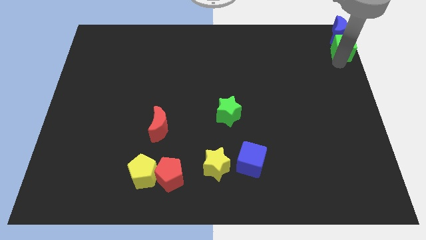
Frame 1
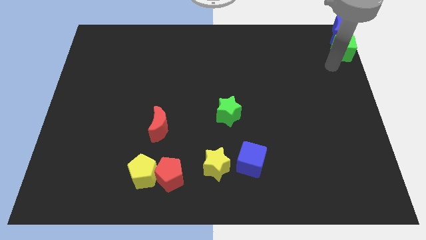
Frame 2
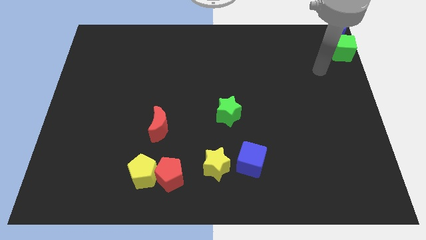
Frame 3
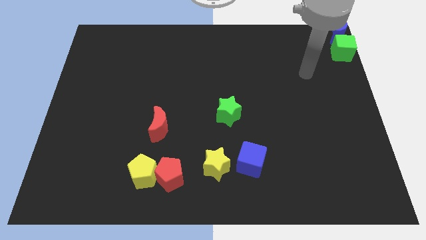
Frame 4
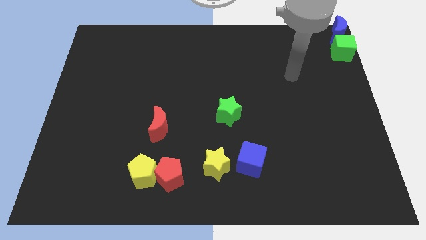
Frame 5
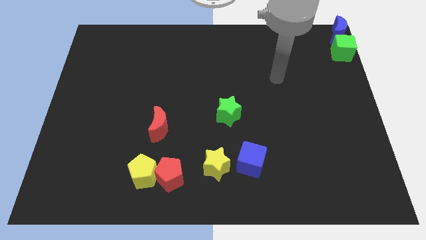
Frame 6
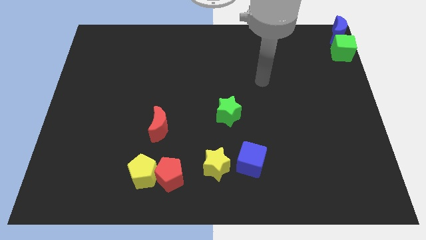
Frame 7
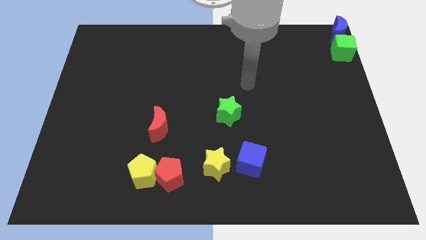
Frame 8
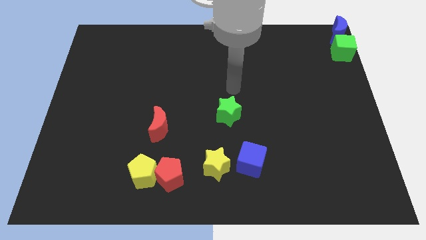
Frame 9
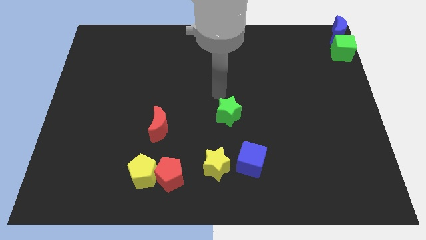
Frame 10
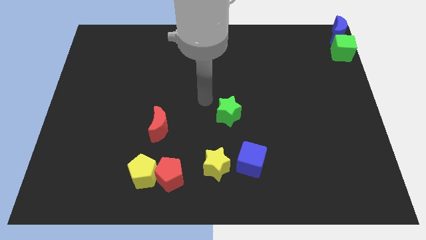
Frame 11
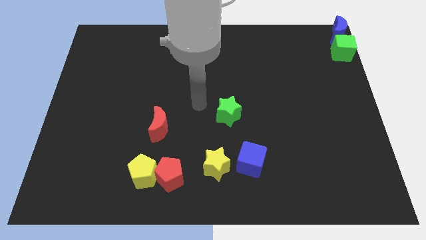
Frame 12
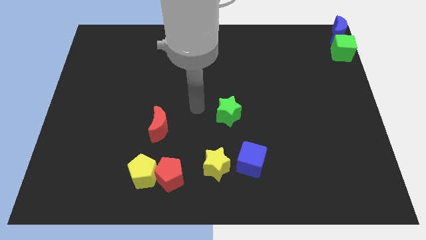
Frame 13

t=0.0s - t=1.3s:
move your arm away from the green cube

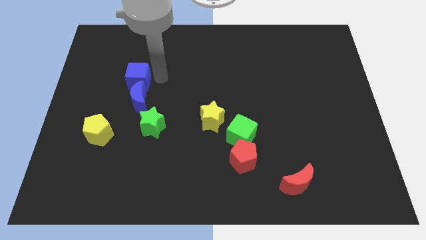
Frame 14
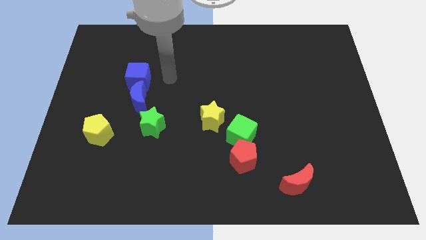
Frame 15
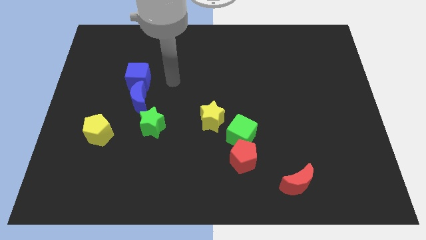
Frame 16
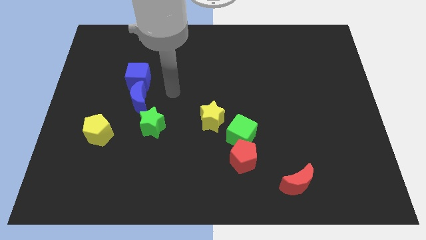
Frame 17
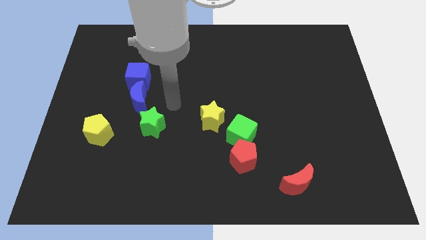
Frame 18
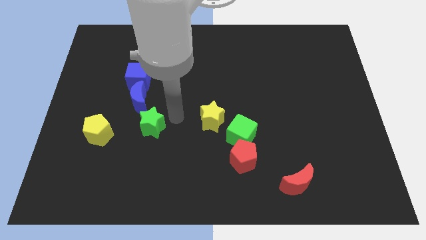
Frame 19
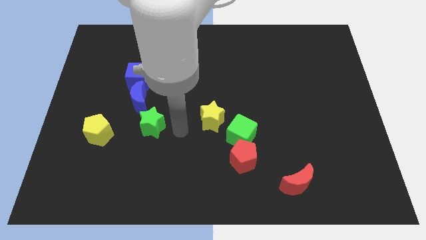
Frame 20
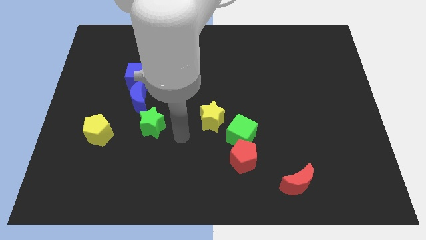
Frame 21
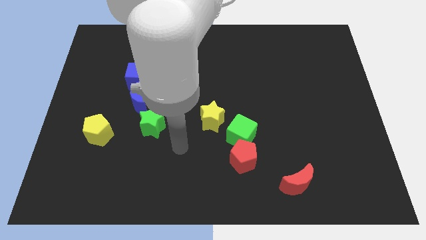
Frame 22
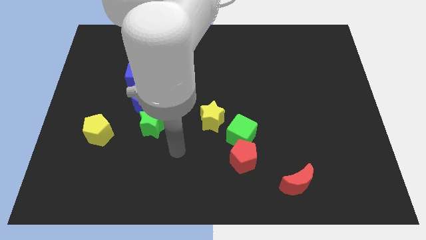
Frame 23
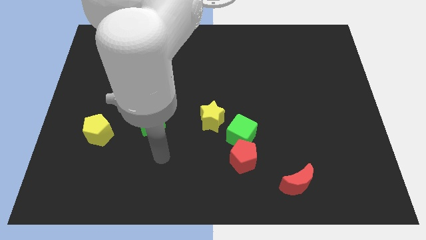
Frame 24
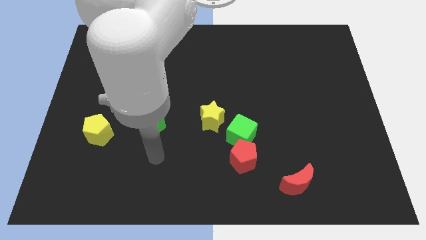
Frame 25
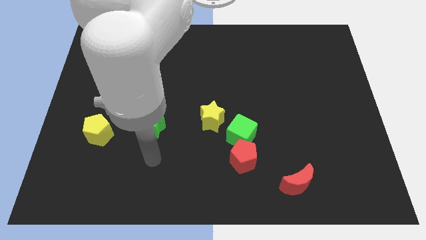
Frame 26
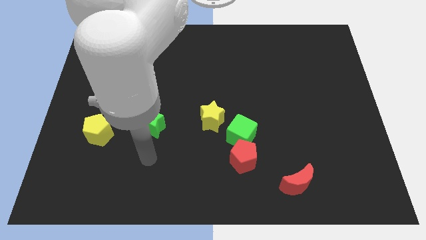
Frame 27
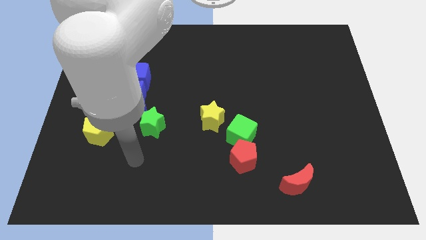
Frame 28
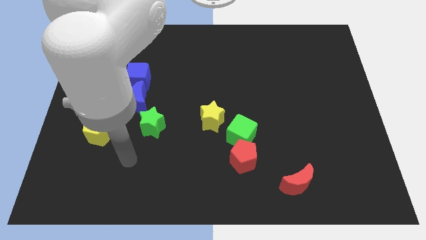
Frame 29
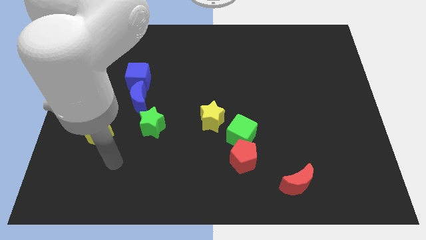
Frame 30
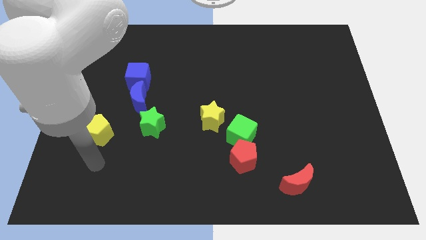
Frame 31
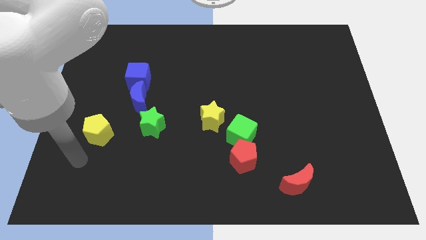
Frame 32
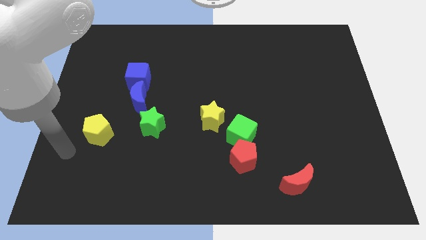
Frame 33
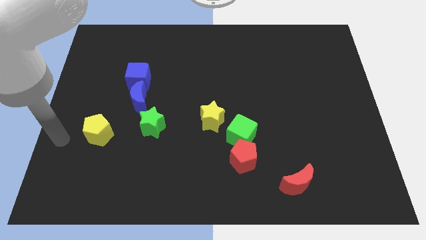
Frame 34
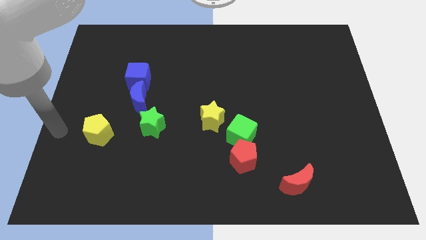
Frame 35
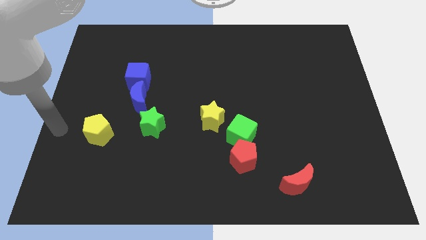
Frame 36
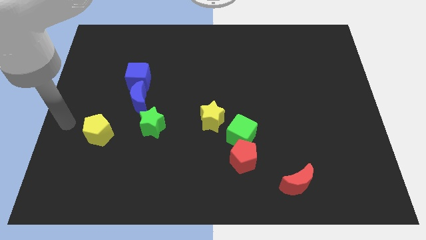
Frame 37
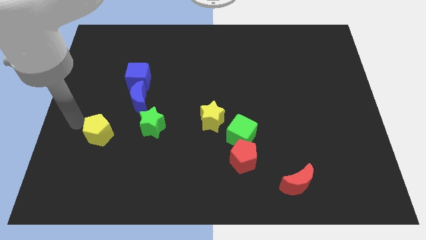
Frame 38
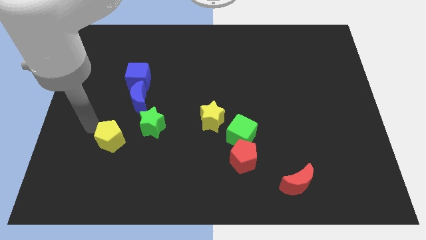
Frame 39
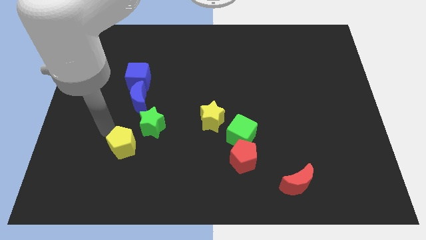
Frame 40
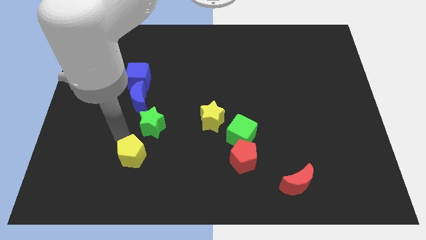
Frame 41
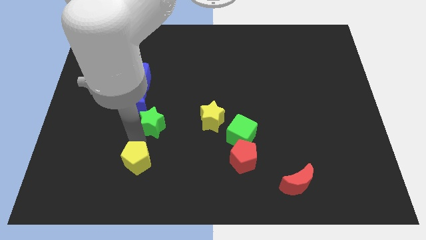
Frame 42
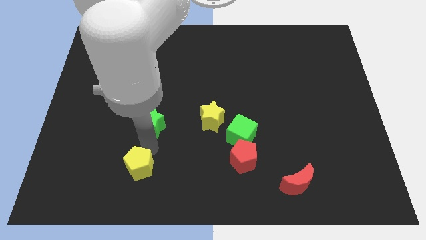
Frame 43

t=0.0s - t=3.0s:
move the yellow pentagon to the bottom of the green star

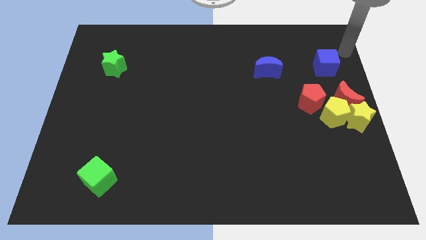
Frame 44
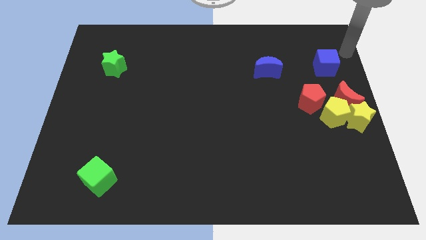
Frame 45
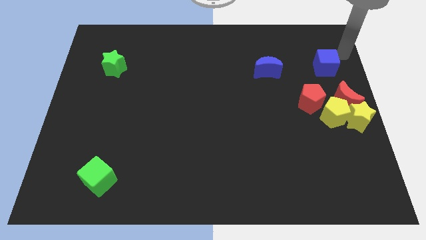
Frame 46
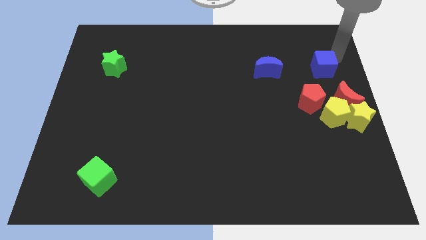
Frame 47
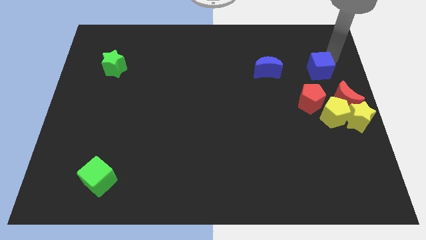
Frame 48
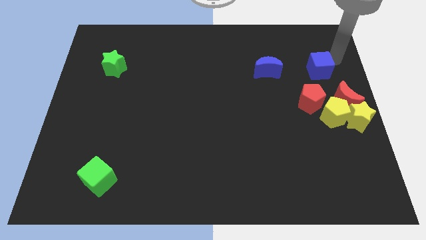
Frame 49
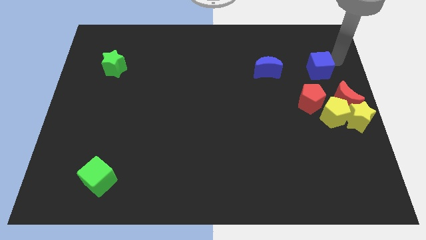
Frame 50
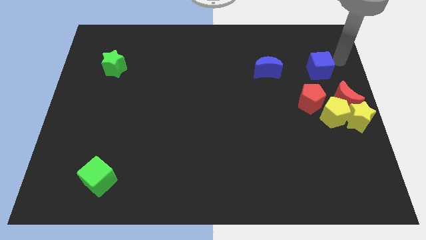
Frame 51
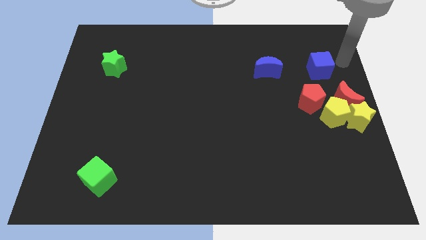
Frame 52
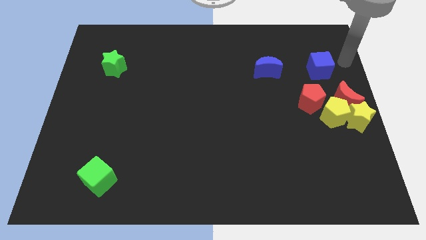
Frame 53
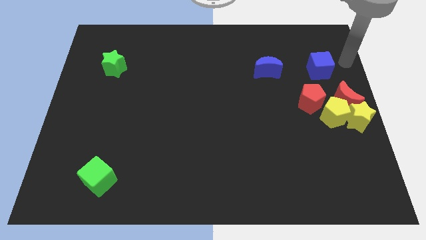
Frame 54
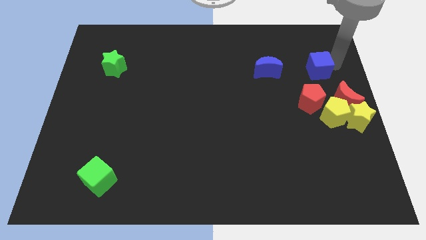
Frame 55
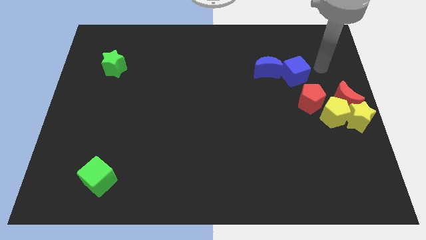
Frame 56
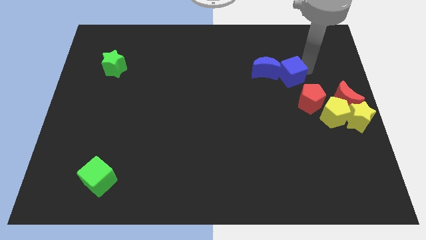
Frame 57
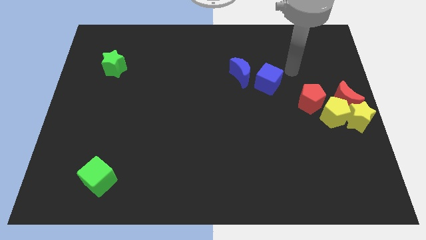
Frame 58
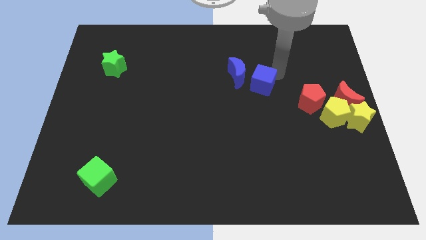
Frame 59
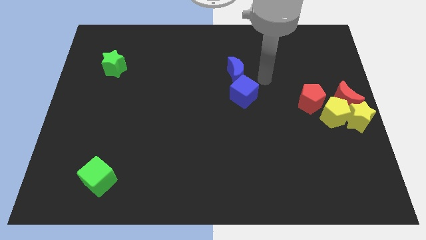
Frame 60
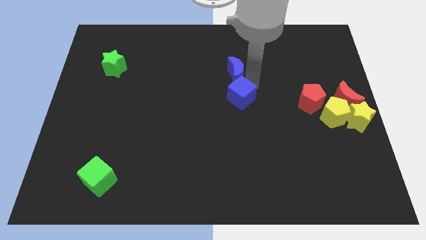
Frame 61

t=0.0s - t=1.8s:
move the blue cube into the blue moon

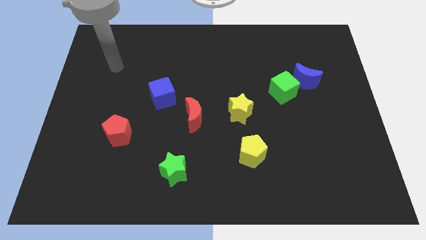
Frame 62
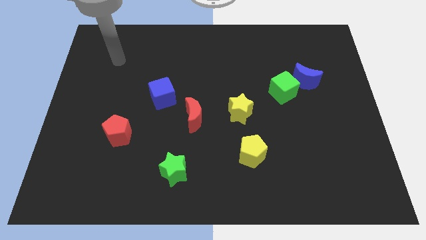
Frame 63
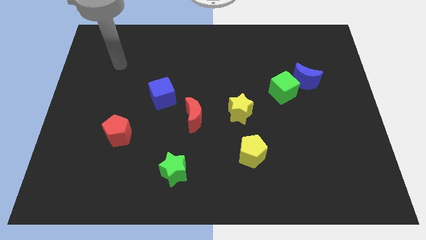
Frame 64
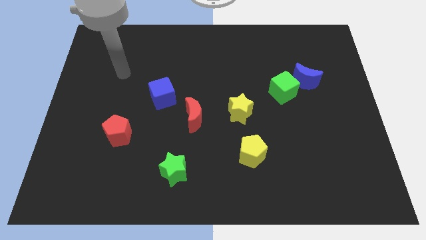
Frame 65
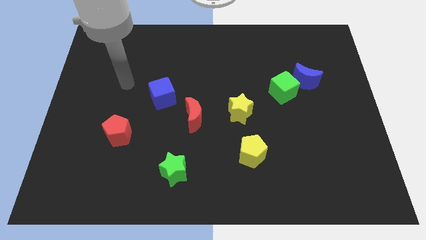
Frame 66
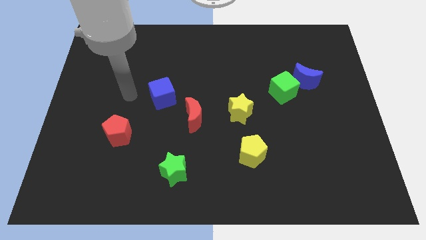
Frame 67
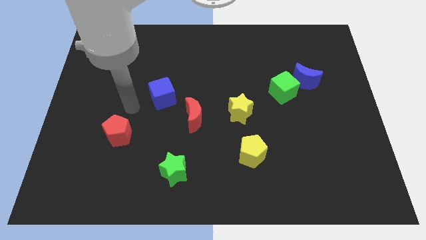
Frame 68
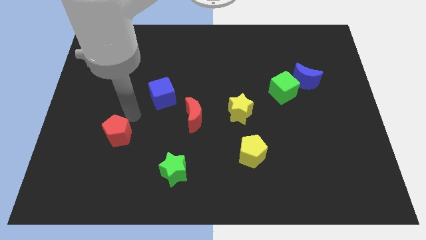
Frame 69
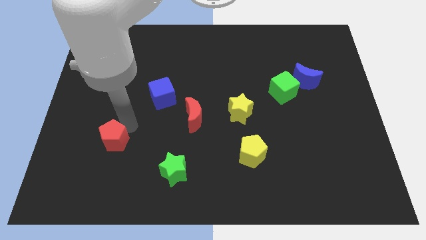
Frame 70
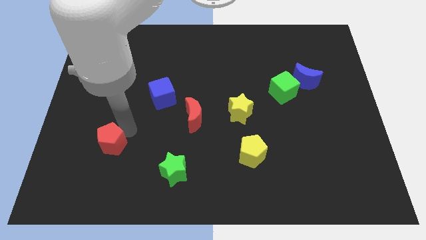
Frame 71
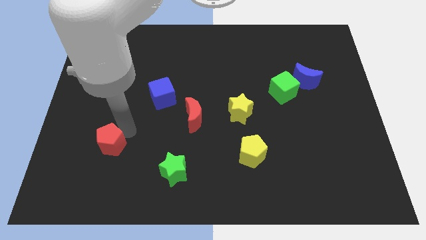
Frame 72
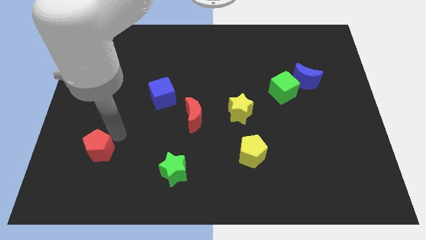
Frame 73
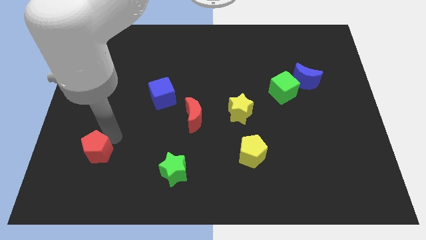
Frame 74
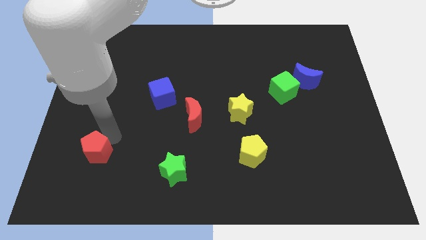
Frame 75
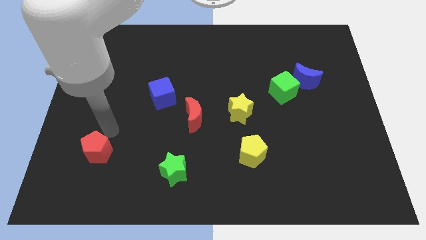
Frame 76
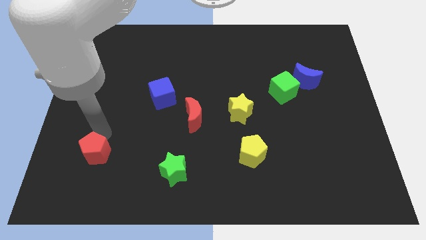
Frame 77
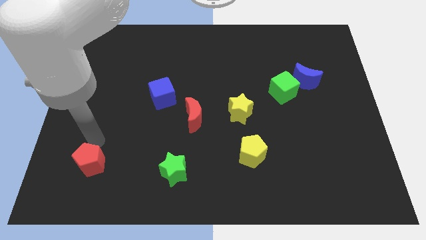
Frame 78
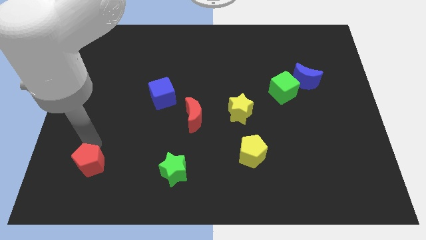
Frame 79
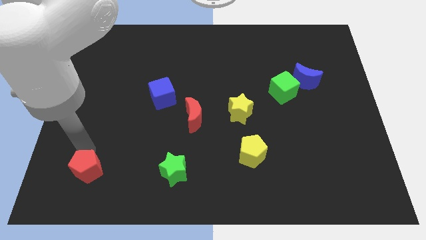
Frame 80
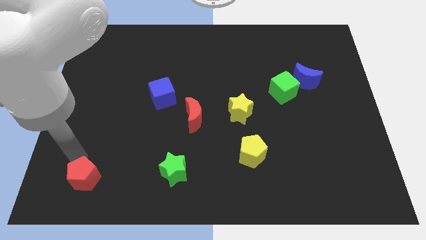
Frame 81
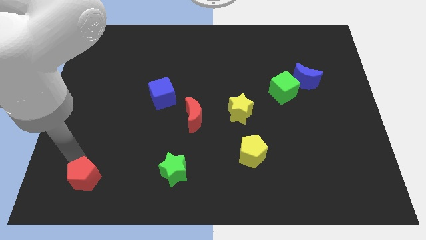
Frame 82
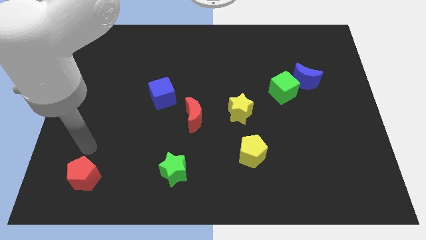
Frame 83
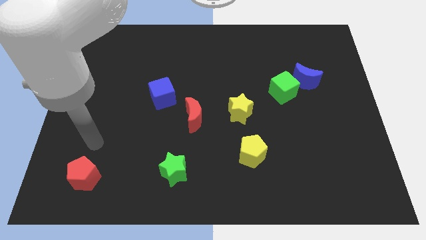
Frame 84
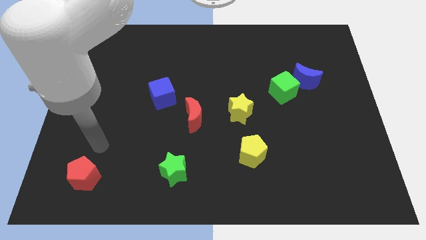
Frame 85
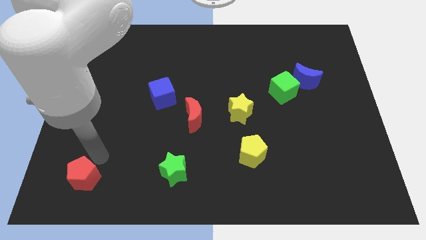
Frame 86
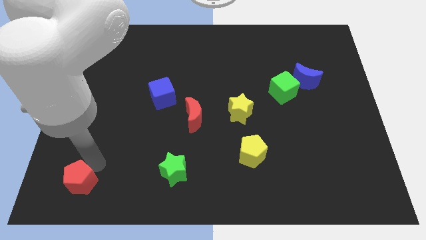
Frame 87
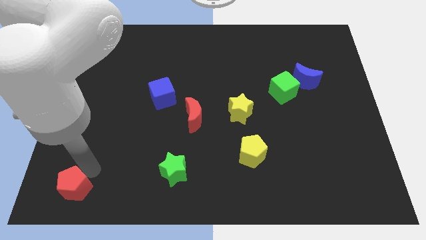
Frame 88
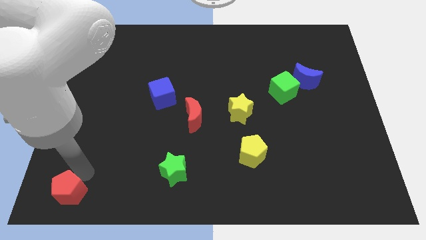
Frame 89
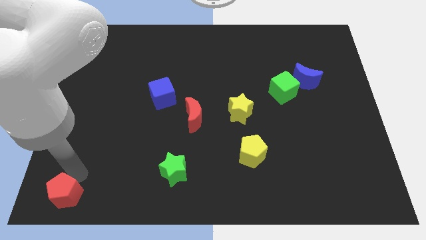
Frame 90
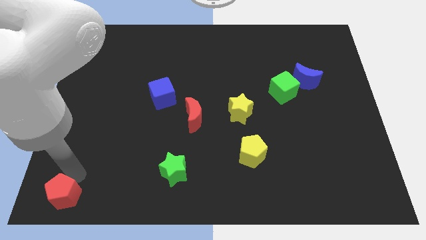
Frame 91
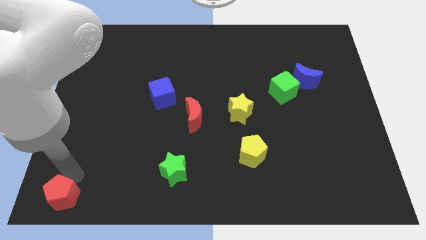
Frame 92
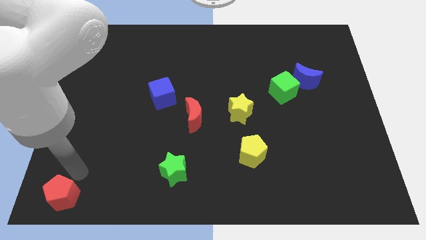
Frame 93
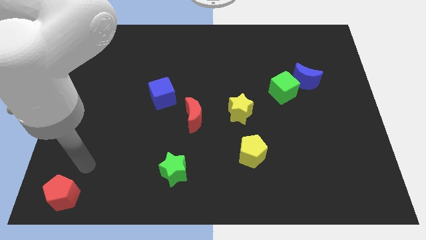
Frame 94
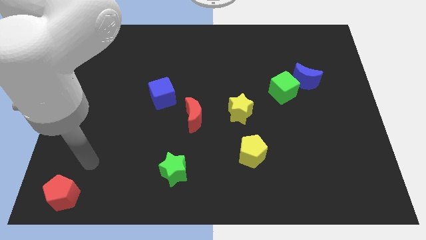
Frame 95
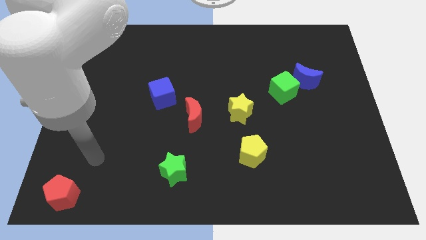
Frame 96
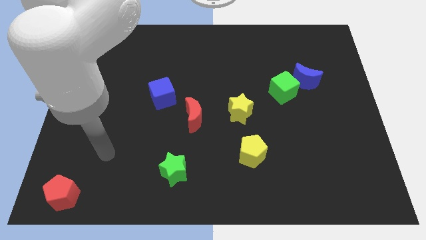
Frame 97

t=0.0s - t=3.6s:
move the red pentagon towards the bottom left corner of the board
